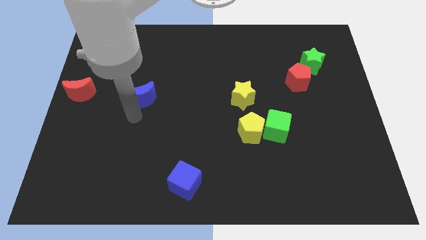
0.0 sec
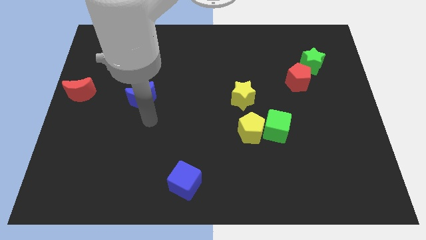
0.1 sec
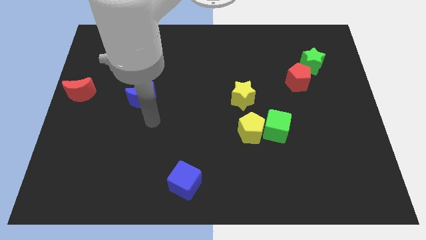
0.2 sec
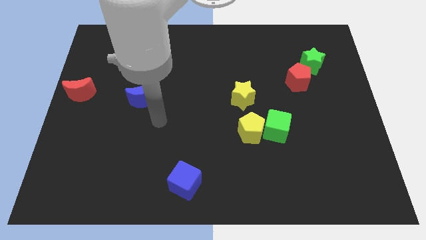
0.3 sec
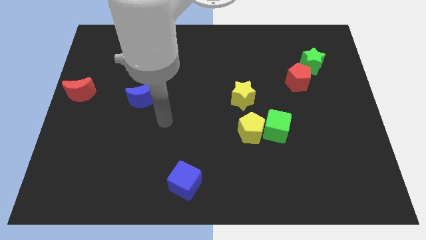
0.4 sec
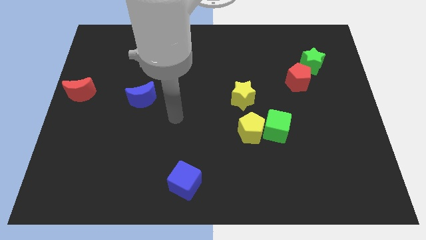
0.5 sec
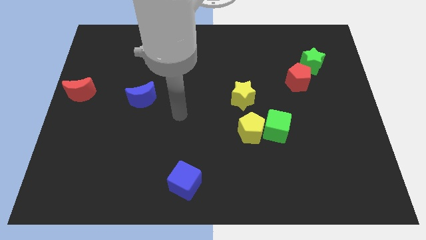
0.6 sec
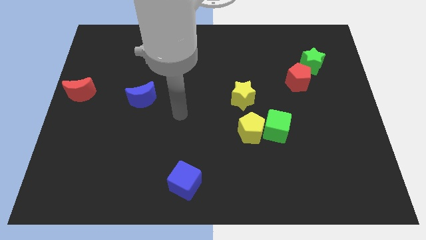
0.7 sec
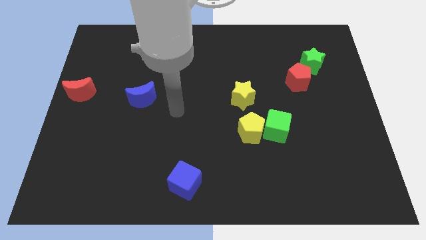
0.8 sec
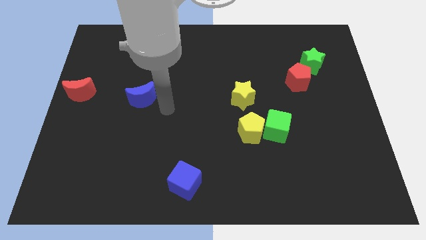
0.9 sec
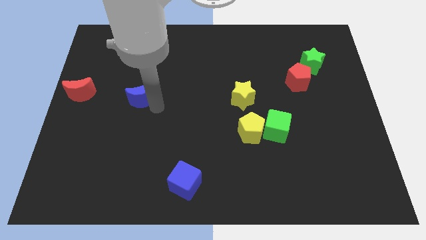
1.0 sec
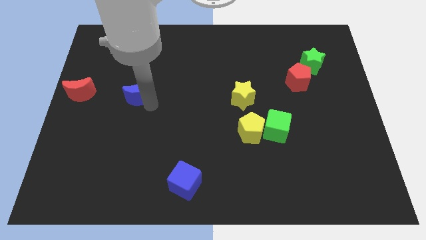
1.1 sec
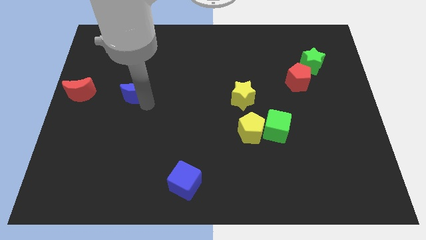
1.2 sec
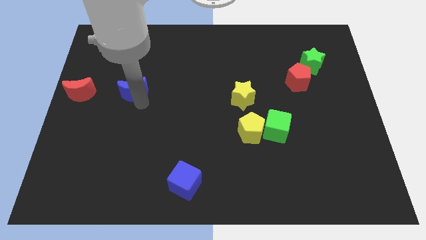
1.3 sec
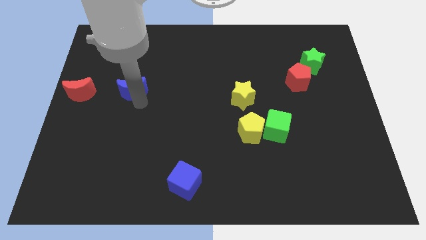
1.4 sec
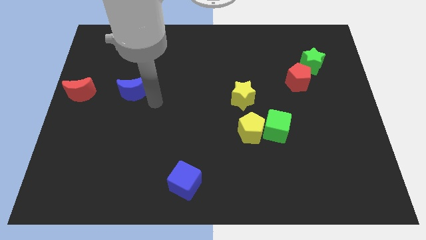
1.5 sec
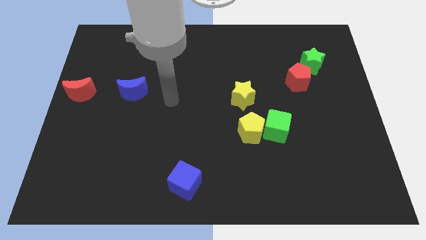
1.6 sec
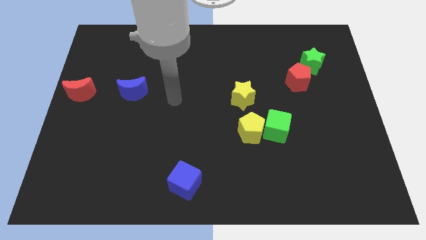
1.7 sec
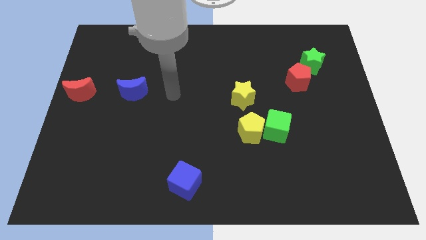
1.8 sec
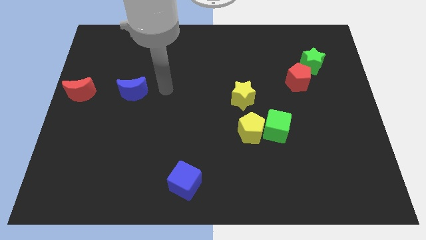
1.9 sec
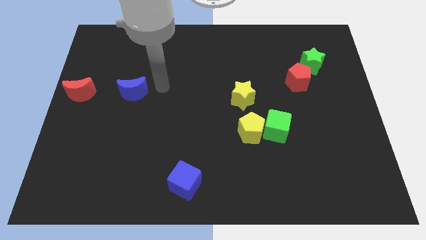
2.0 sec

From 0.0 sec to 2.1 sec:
push the blue crescent towards the red crescent

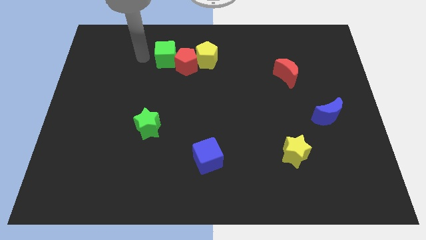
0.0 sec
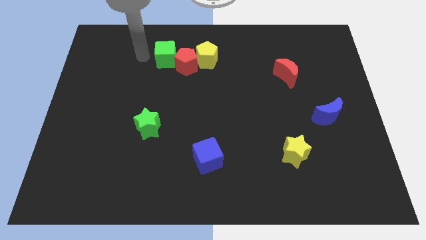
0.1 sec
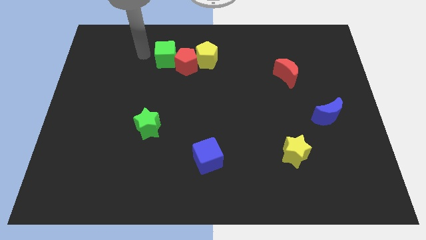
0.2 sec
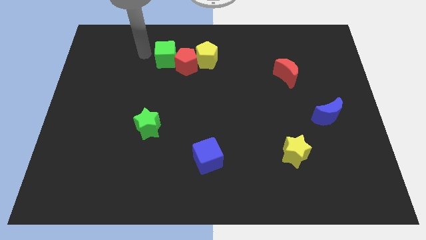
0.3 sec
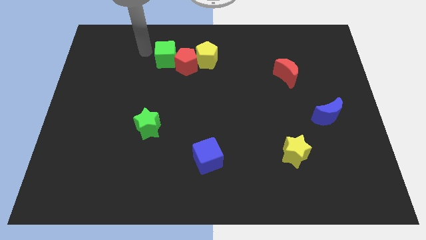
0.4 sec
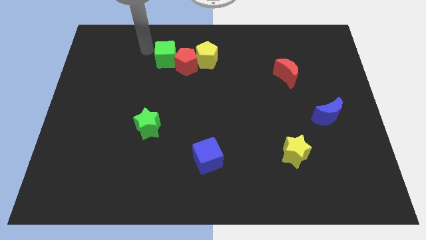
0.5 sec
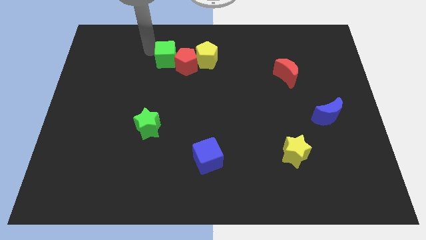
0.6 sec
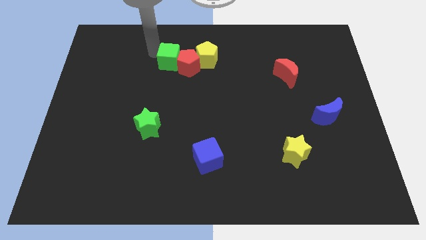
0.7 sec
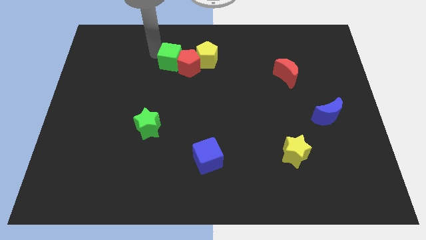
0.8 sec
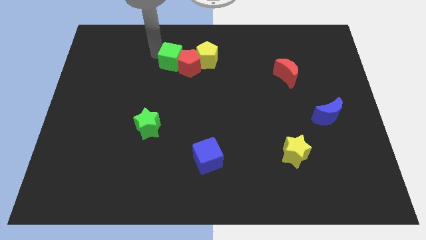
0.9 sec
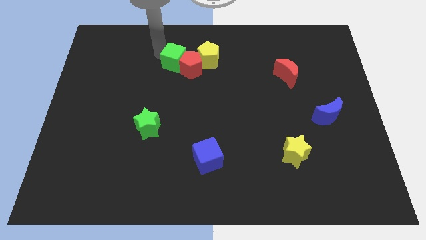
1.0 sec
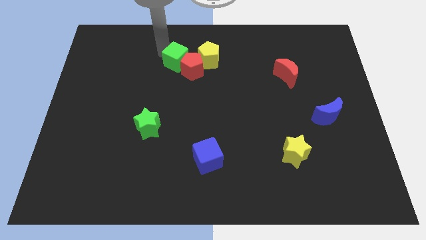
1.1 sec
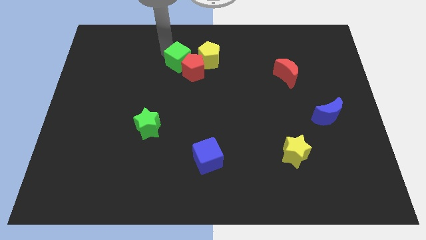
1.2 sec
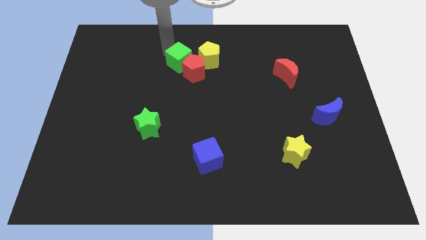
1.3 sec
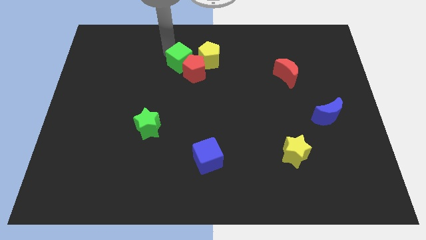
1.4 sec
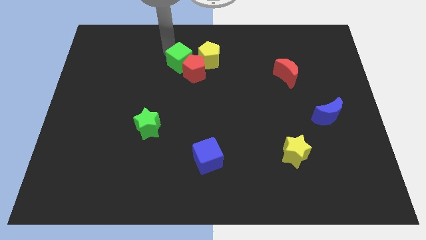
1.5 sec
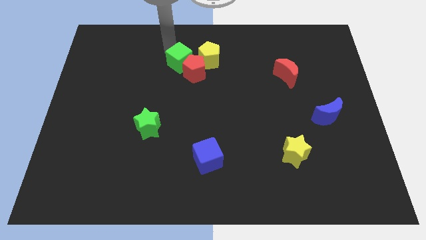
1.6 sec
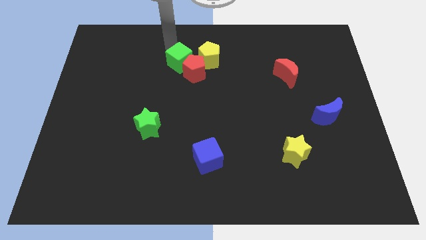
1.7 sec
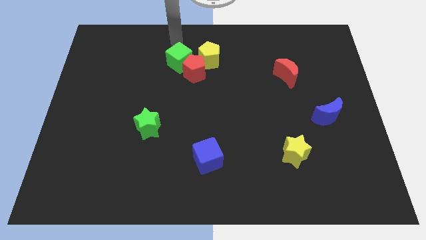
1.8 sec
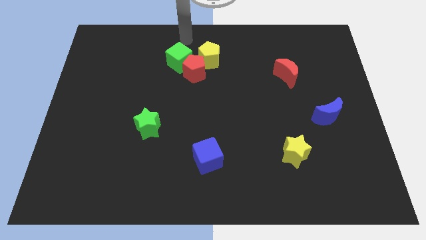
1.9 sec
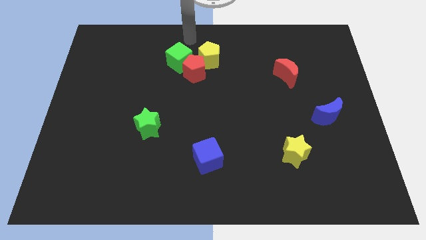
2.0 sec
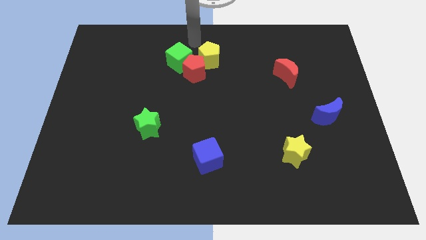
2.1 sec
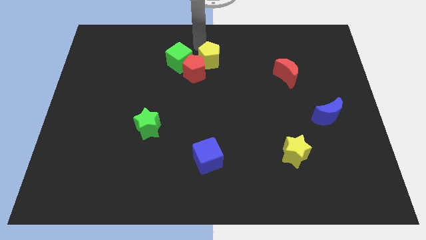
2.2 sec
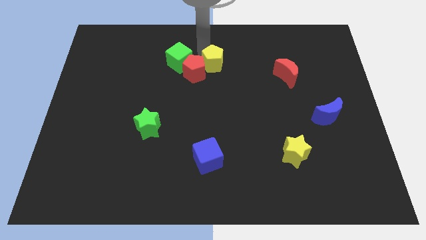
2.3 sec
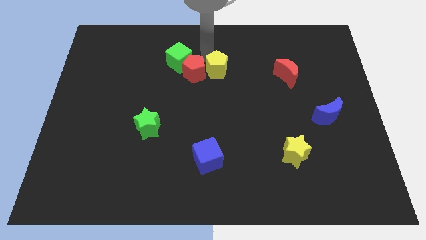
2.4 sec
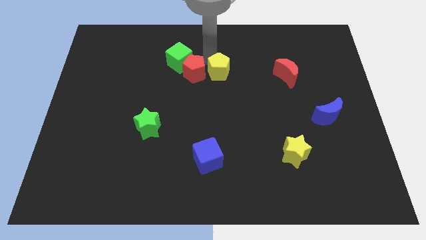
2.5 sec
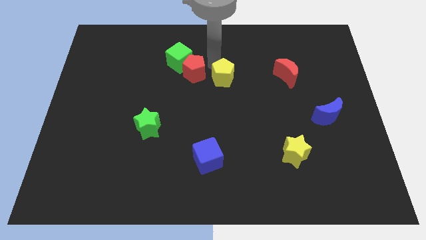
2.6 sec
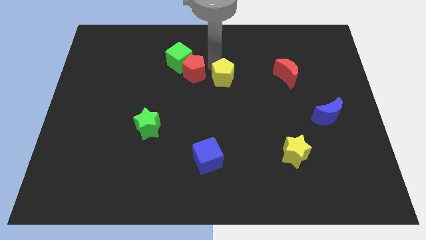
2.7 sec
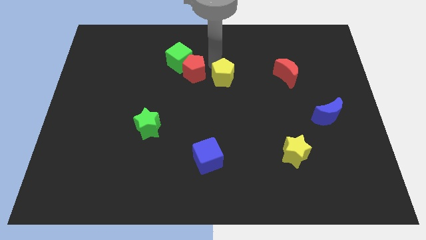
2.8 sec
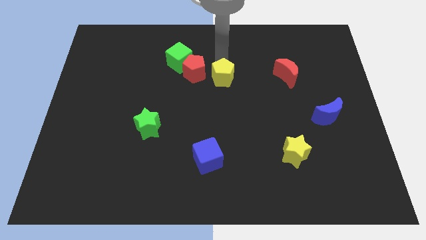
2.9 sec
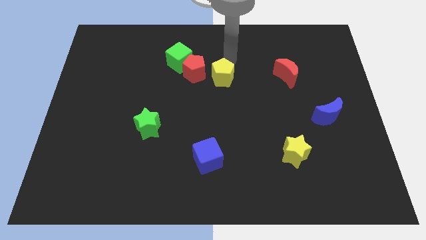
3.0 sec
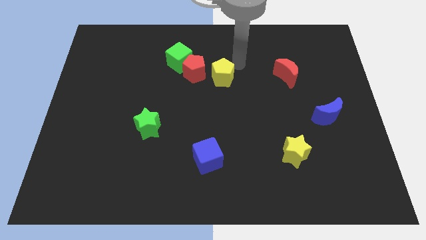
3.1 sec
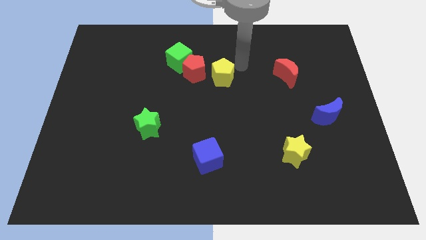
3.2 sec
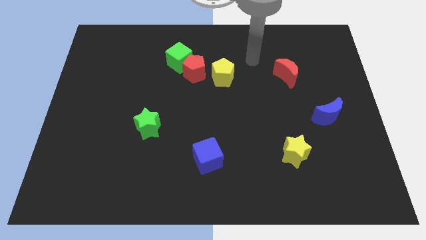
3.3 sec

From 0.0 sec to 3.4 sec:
place the green cube red pentagon and yellow pentagon diagonally at the top side of the table

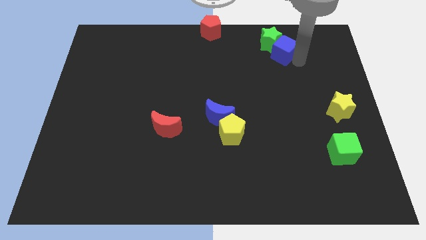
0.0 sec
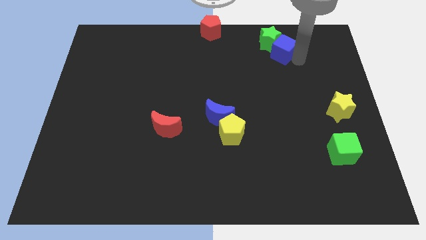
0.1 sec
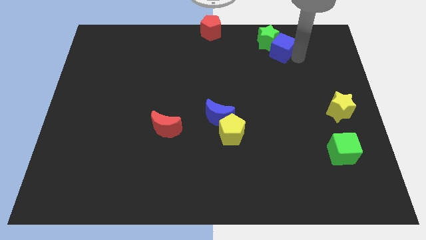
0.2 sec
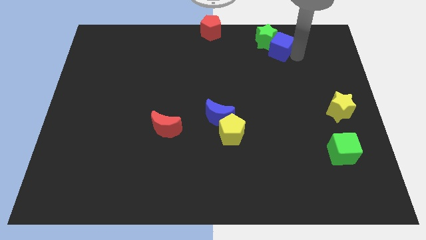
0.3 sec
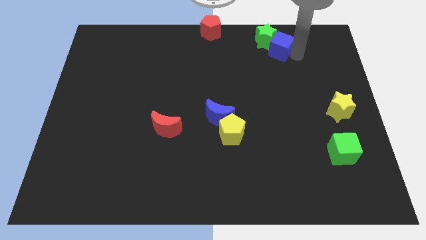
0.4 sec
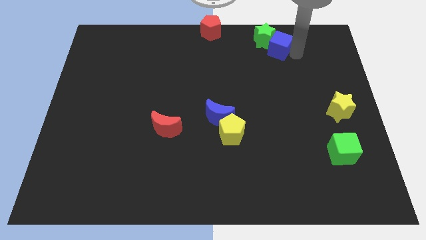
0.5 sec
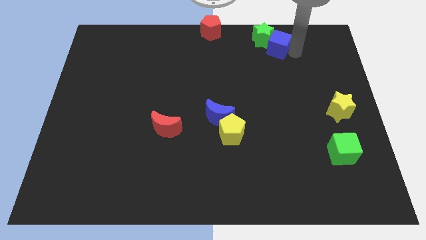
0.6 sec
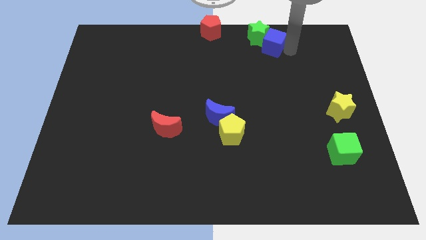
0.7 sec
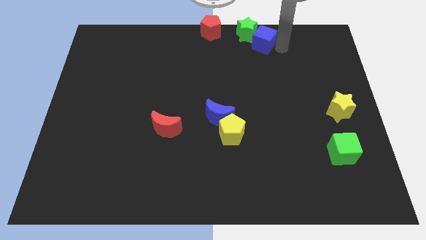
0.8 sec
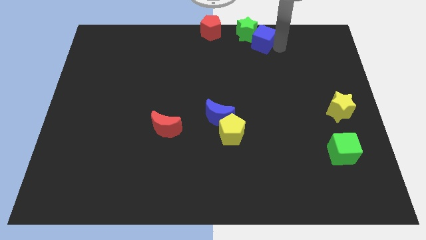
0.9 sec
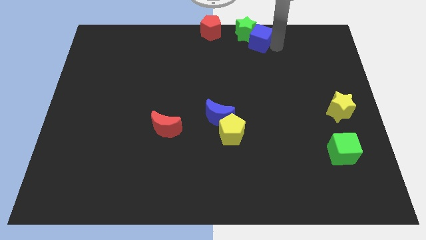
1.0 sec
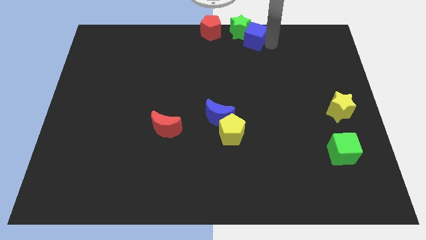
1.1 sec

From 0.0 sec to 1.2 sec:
push the blue cube along with the green star to the right of the red pentagon

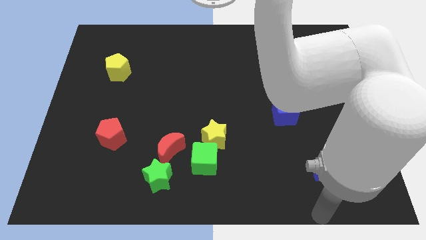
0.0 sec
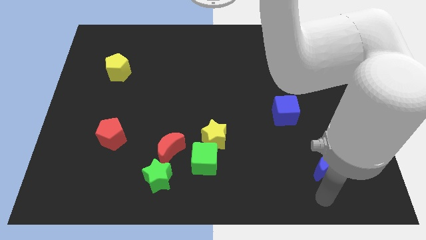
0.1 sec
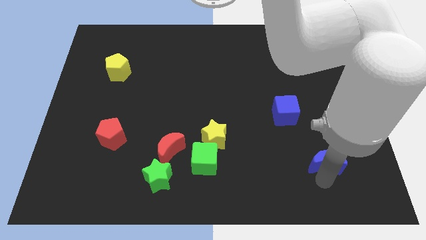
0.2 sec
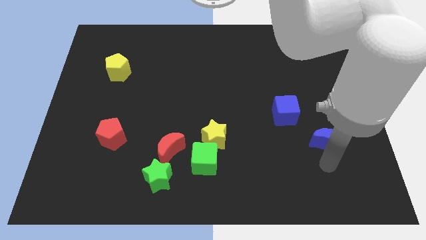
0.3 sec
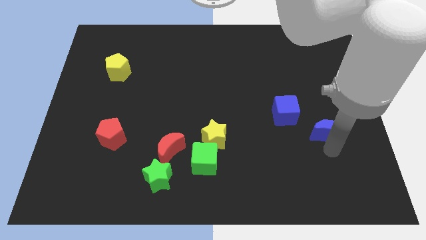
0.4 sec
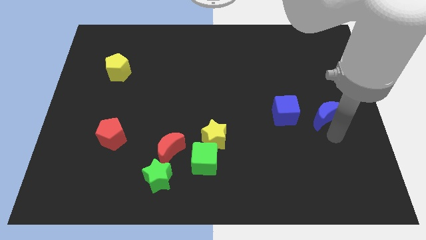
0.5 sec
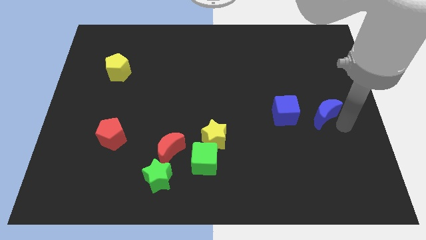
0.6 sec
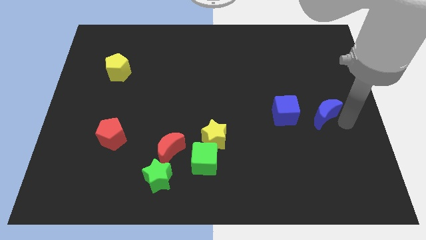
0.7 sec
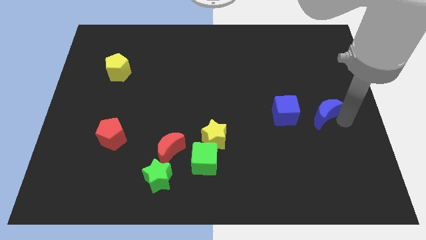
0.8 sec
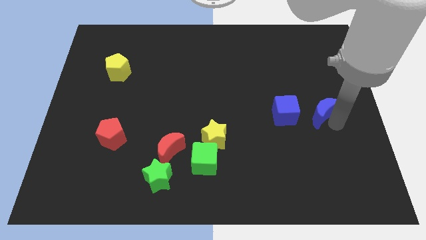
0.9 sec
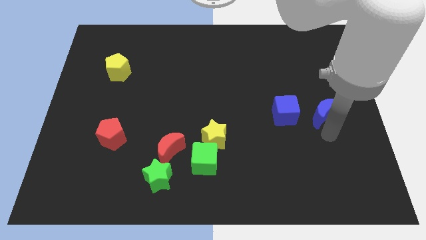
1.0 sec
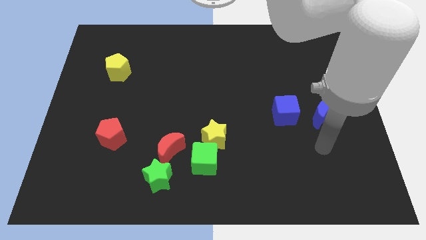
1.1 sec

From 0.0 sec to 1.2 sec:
move the blue crescent right to the blue cube

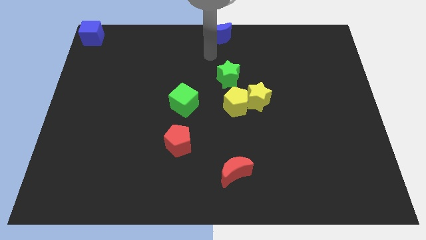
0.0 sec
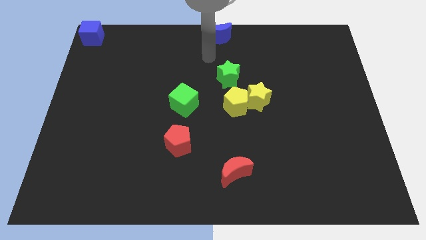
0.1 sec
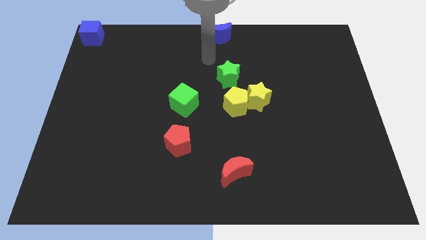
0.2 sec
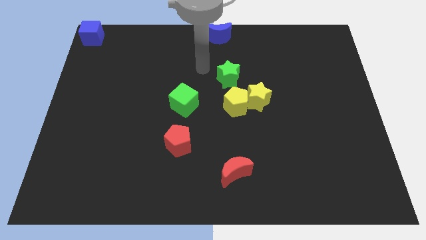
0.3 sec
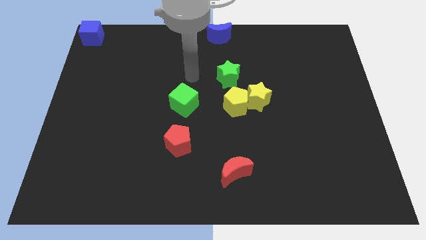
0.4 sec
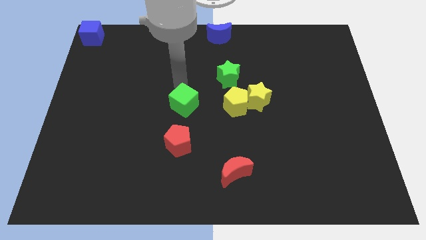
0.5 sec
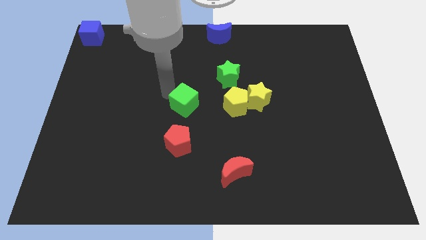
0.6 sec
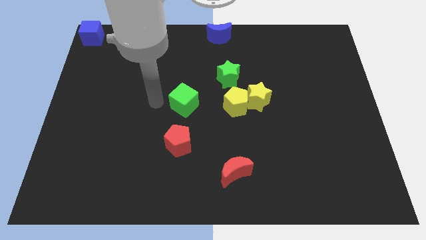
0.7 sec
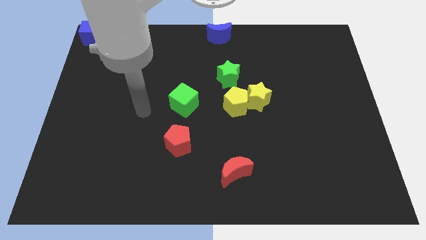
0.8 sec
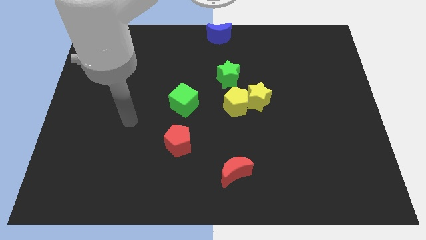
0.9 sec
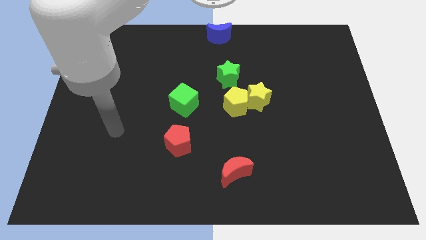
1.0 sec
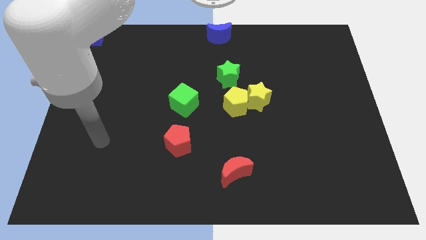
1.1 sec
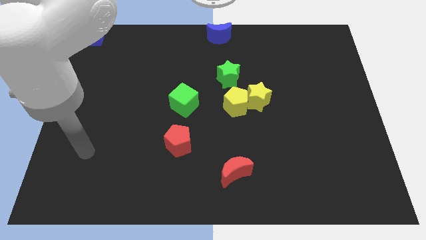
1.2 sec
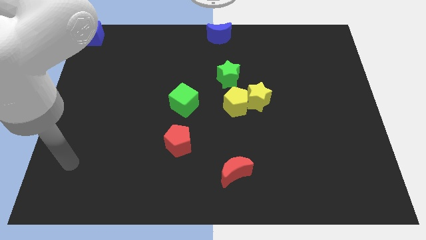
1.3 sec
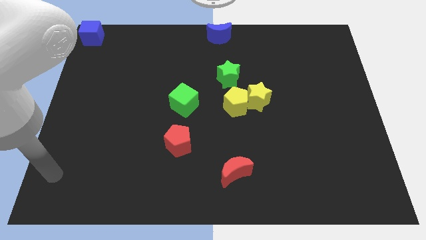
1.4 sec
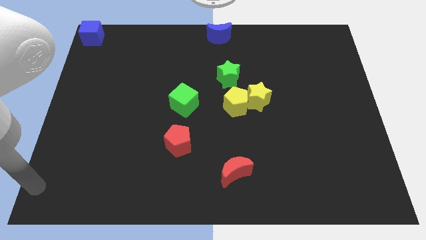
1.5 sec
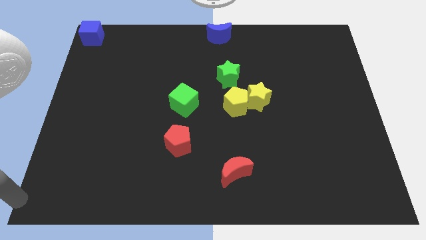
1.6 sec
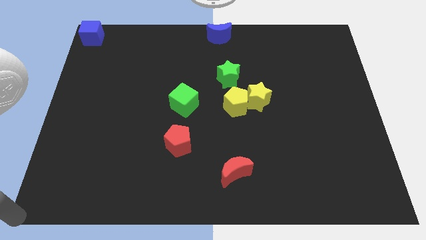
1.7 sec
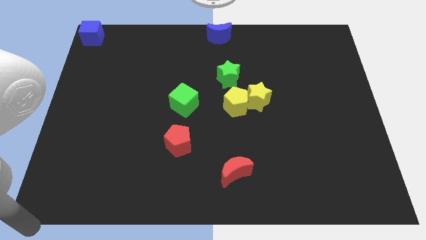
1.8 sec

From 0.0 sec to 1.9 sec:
put your arm at the bottom left corner of the board
